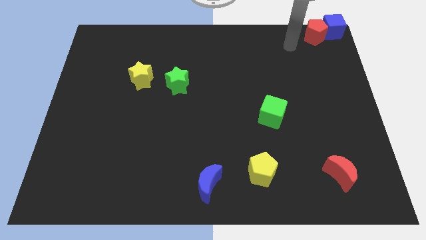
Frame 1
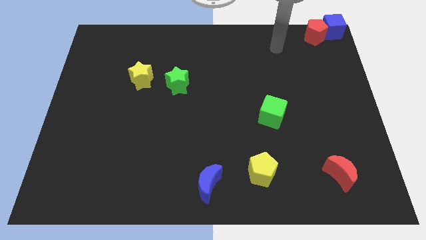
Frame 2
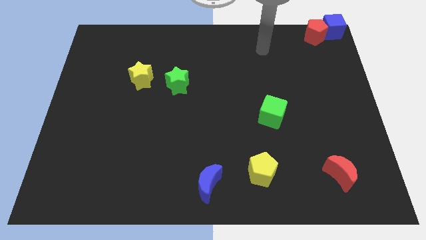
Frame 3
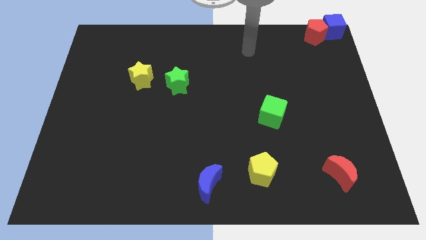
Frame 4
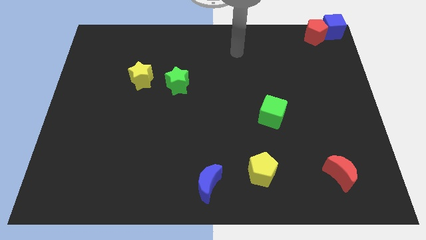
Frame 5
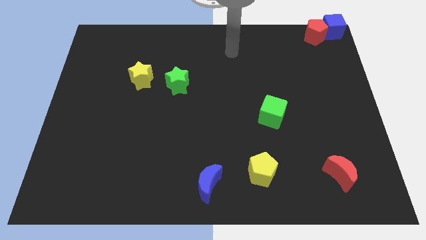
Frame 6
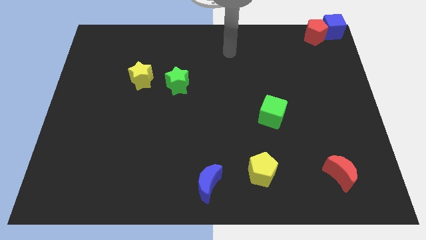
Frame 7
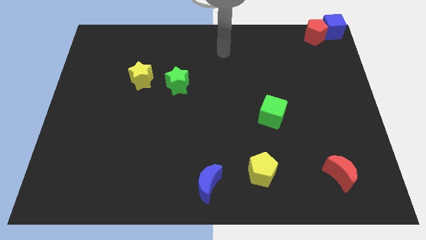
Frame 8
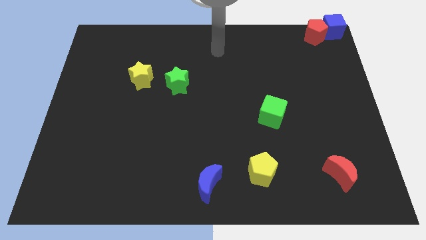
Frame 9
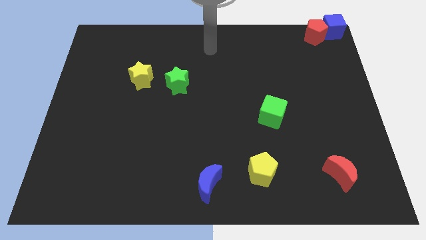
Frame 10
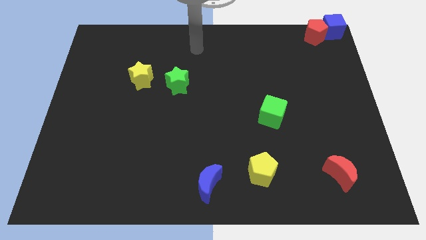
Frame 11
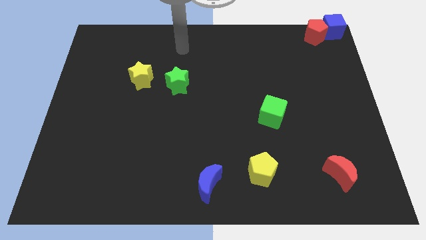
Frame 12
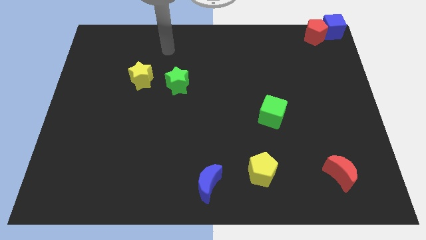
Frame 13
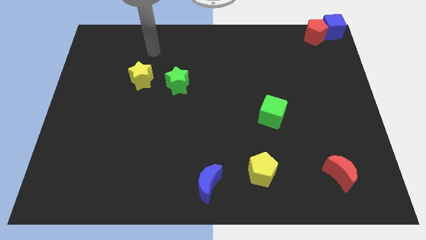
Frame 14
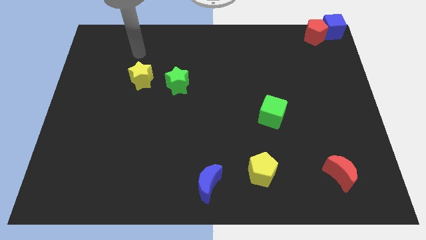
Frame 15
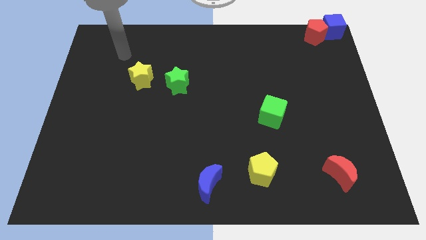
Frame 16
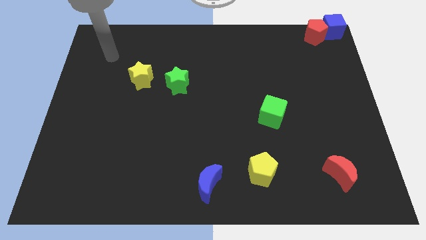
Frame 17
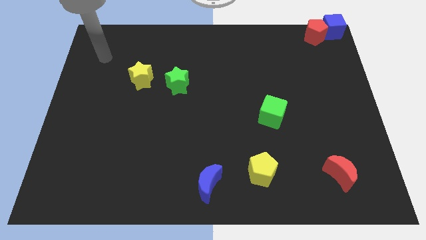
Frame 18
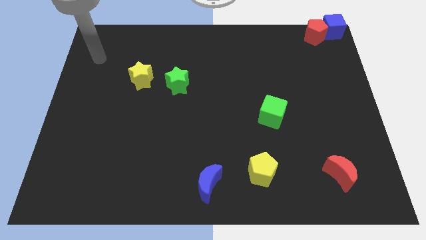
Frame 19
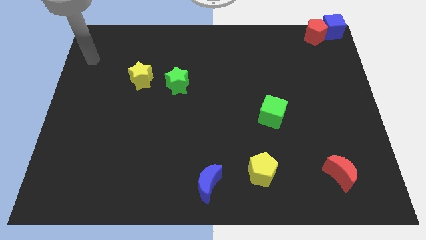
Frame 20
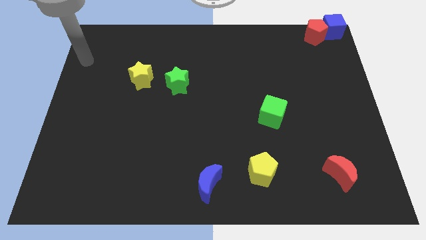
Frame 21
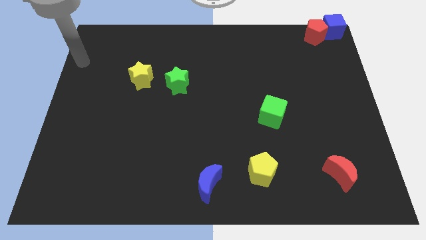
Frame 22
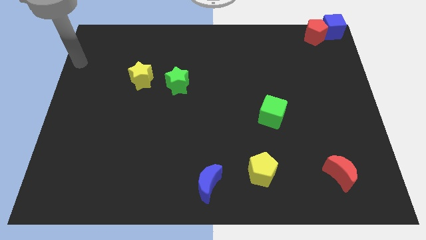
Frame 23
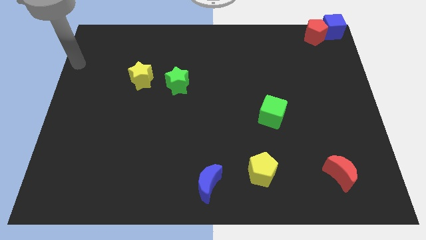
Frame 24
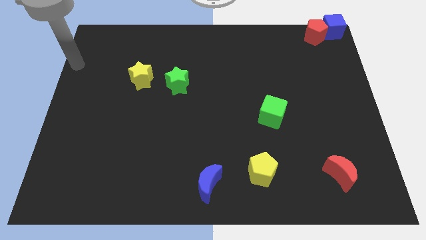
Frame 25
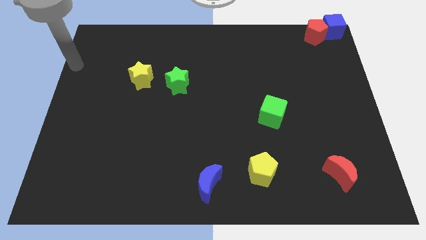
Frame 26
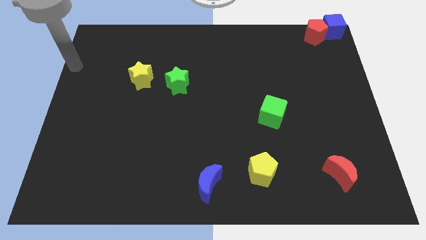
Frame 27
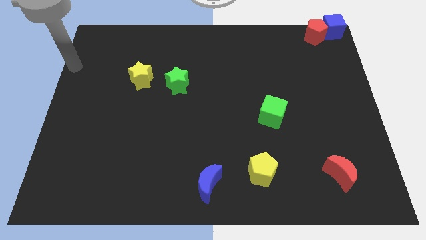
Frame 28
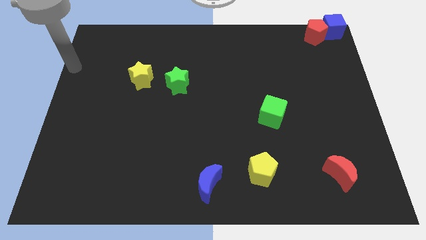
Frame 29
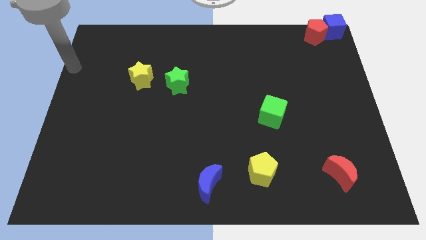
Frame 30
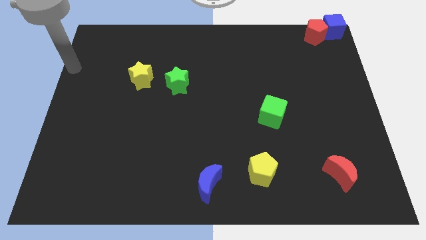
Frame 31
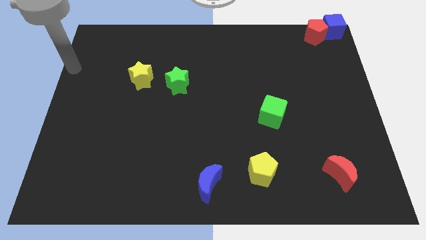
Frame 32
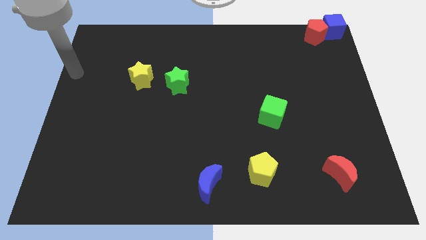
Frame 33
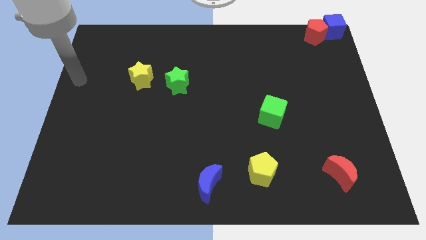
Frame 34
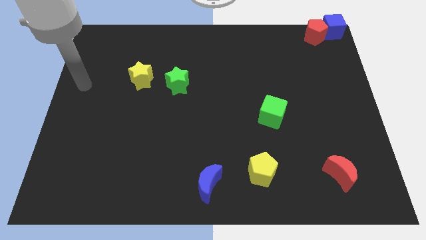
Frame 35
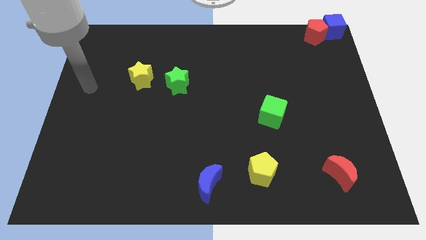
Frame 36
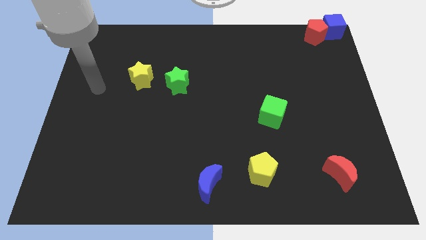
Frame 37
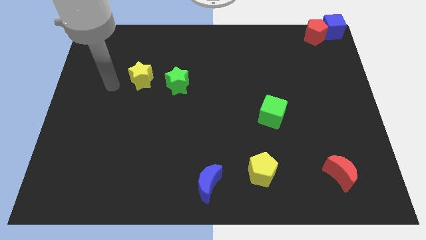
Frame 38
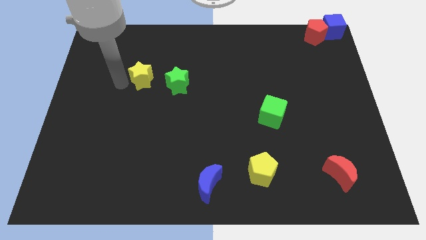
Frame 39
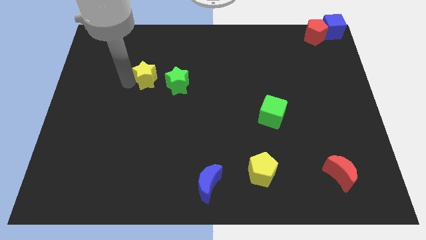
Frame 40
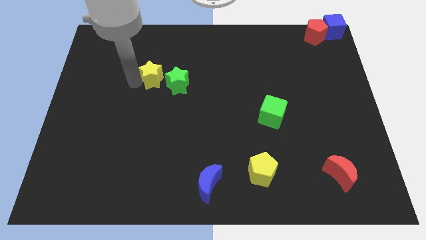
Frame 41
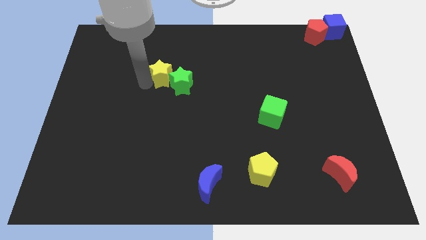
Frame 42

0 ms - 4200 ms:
move the yellow star into the green star

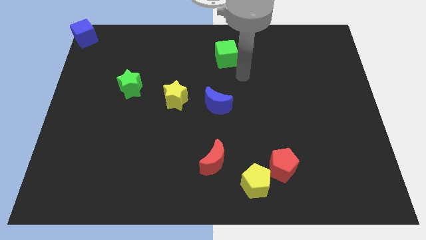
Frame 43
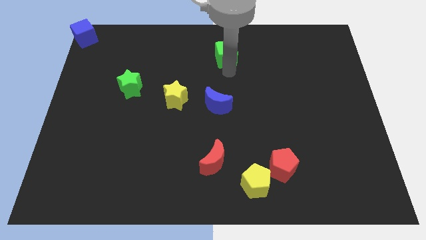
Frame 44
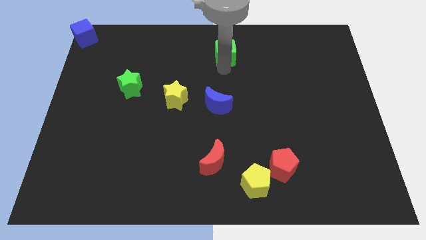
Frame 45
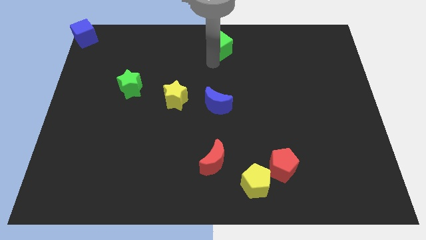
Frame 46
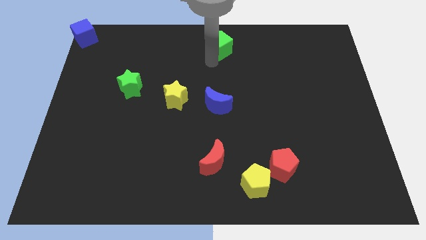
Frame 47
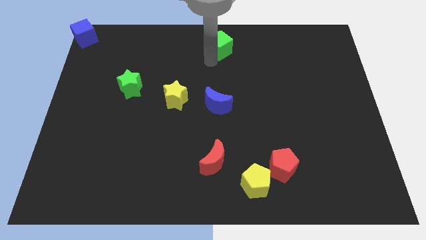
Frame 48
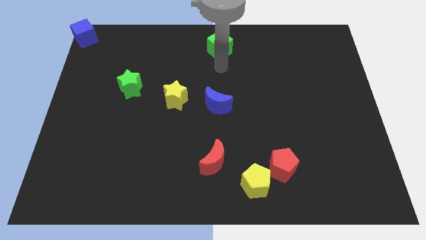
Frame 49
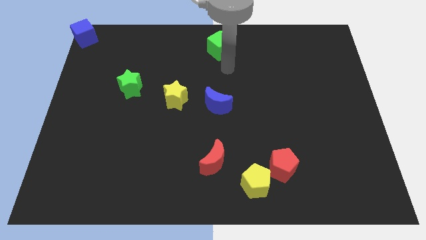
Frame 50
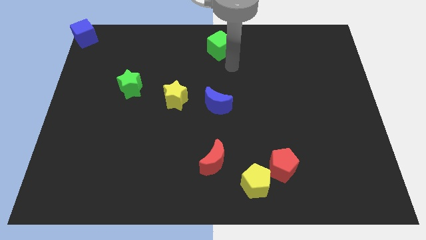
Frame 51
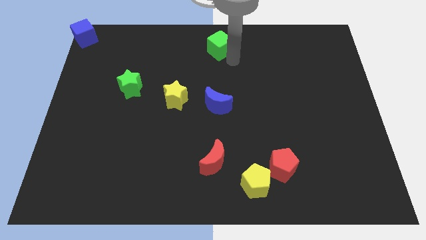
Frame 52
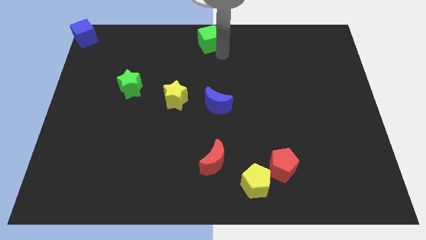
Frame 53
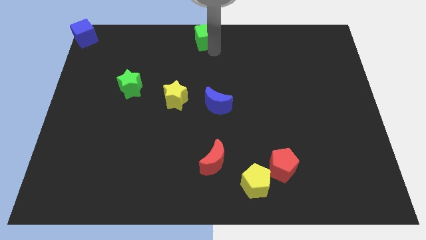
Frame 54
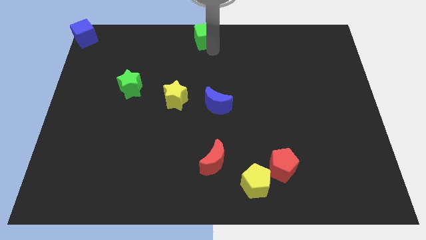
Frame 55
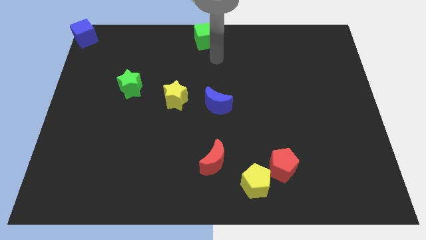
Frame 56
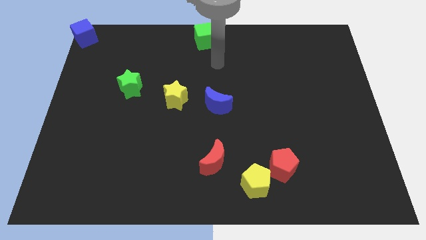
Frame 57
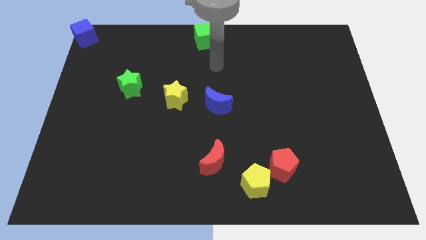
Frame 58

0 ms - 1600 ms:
put the green cube at the top center of the board

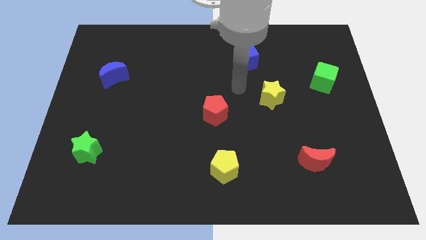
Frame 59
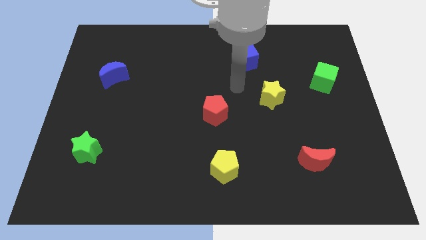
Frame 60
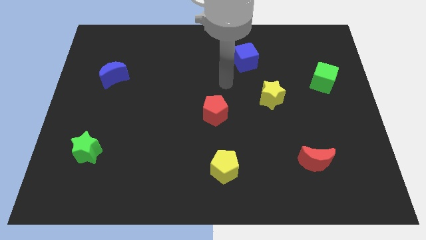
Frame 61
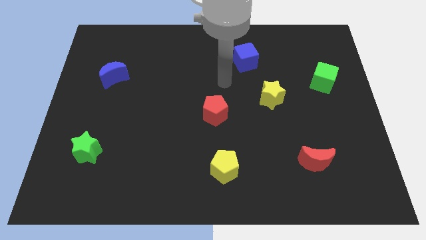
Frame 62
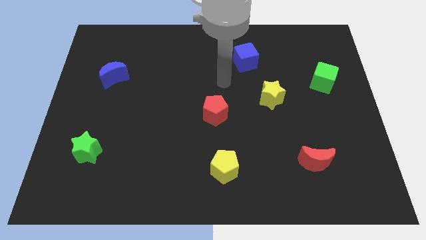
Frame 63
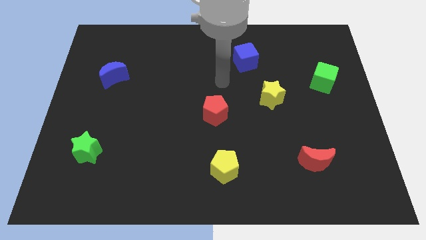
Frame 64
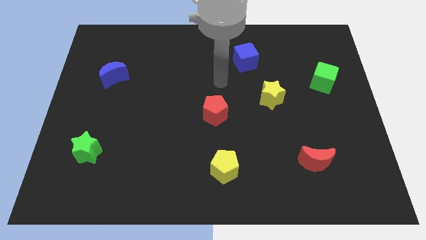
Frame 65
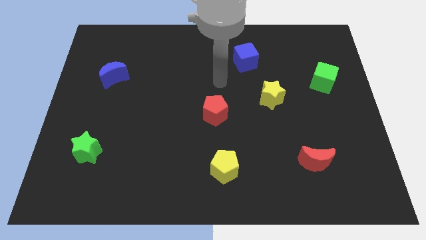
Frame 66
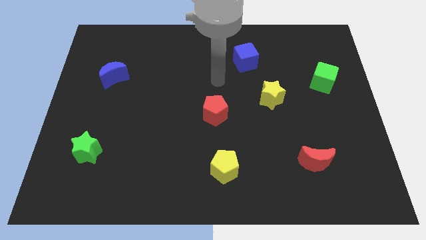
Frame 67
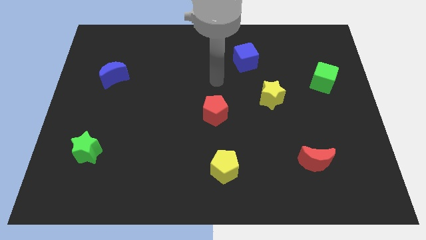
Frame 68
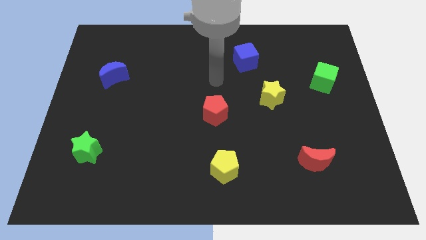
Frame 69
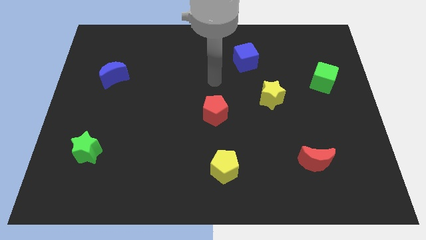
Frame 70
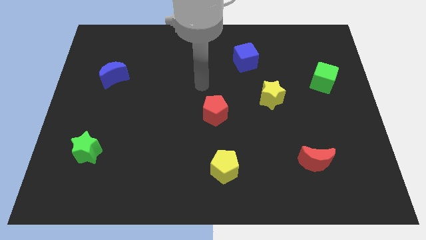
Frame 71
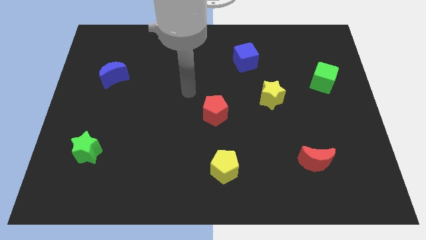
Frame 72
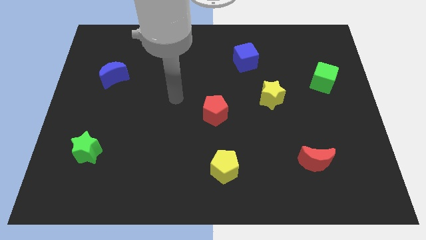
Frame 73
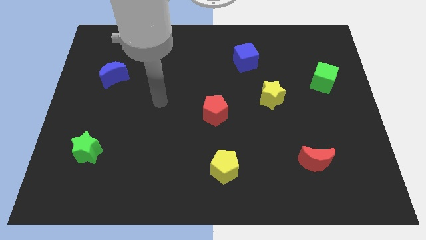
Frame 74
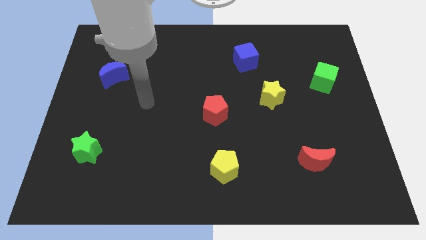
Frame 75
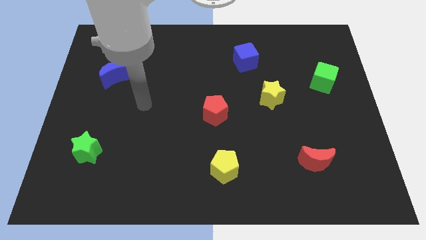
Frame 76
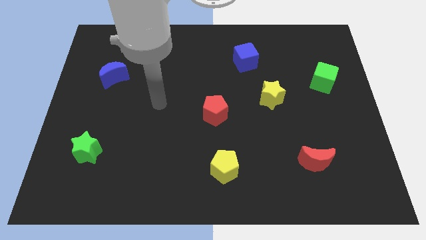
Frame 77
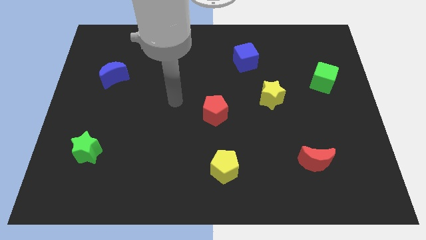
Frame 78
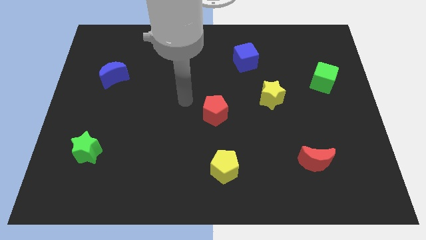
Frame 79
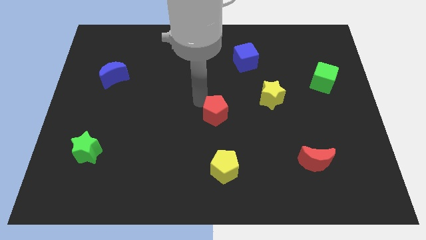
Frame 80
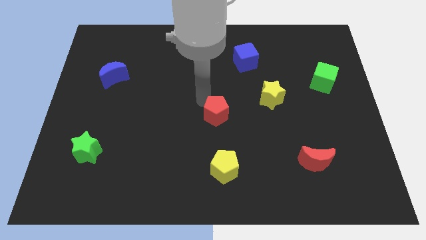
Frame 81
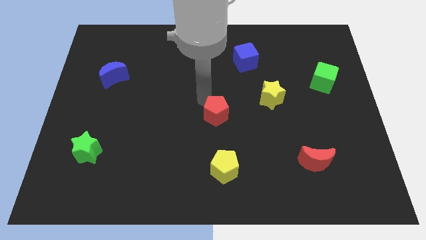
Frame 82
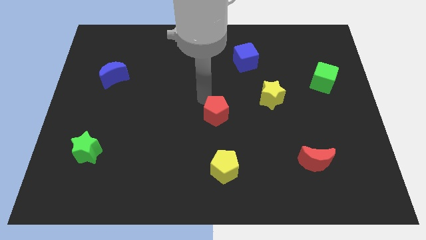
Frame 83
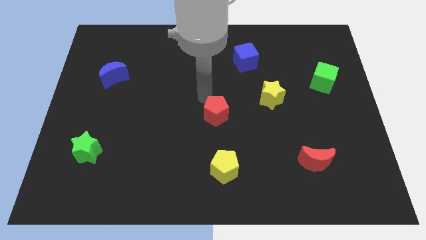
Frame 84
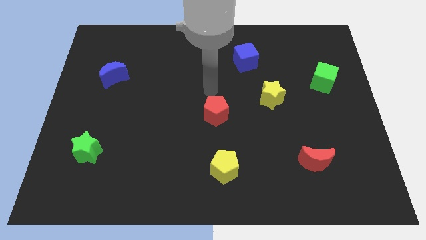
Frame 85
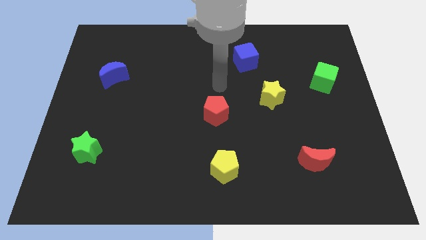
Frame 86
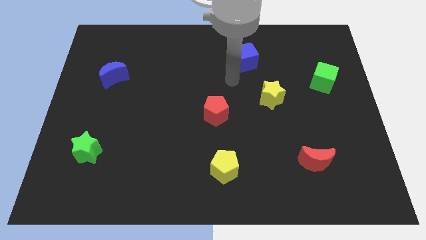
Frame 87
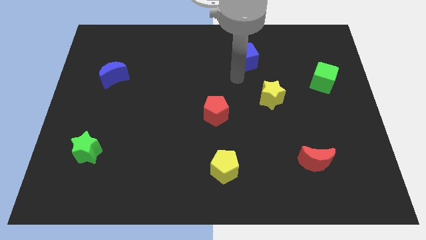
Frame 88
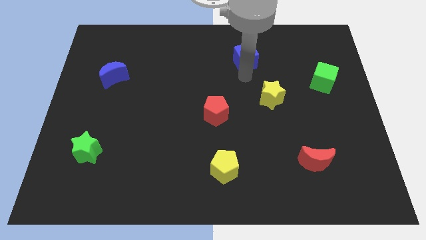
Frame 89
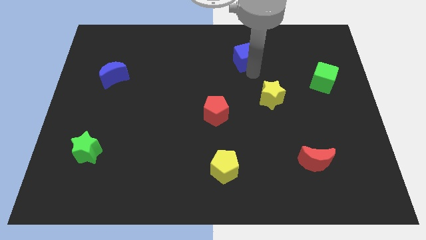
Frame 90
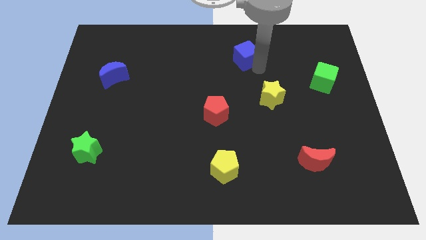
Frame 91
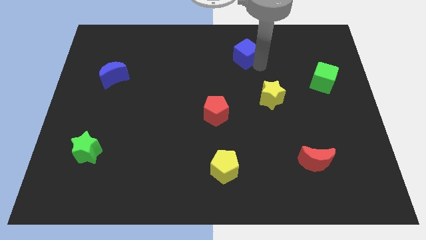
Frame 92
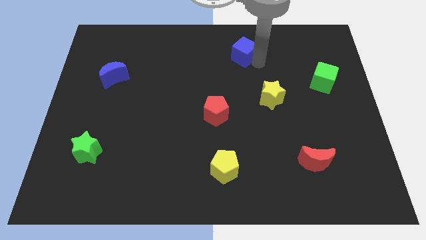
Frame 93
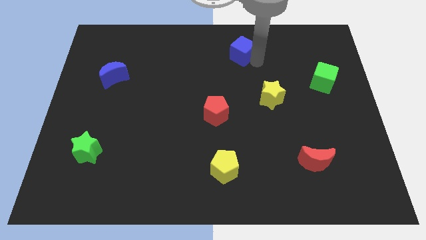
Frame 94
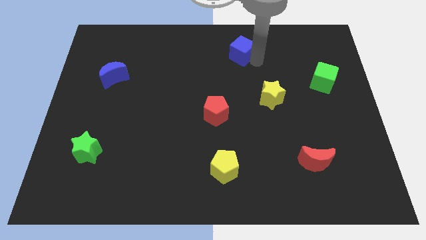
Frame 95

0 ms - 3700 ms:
push the blue cube towards the top center
